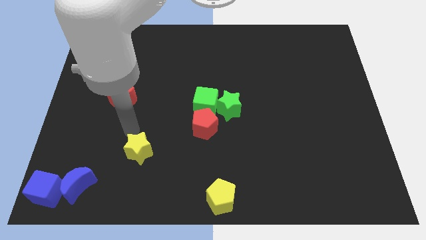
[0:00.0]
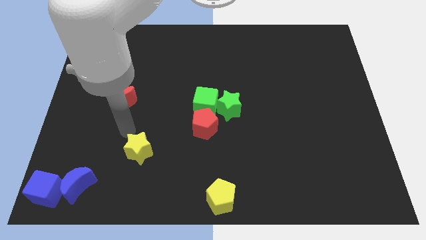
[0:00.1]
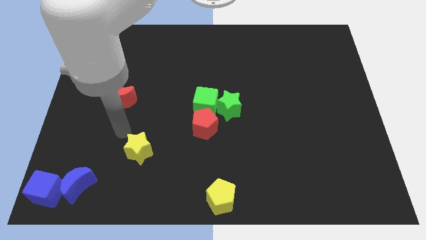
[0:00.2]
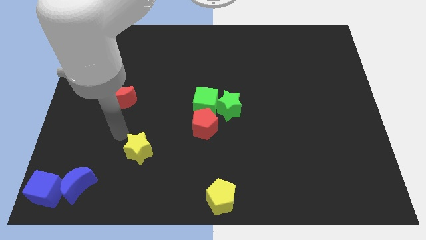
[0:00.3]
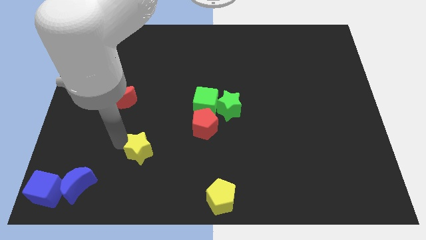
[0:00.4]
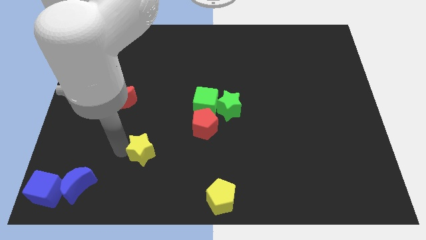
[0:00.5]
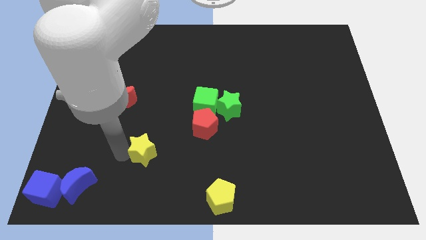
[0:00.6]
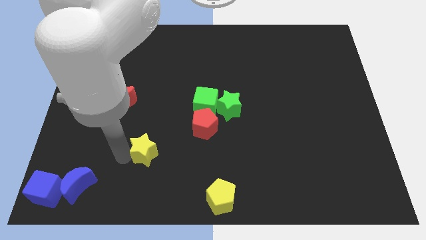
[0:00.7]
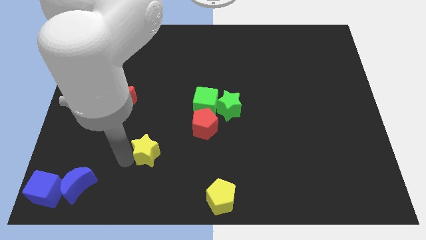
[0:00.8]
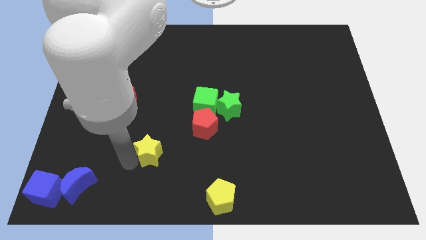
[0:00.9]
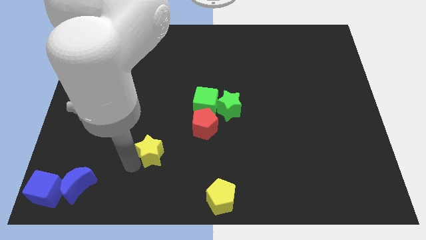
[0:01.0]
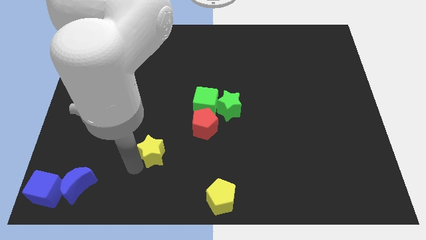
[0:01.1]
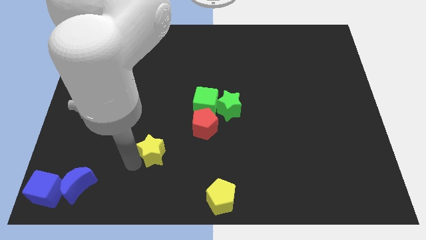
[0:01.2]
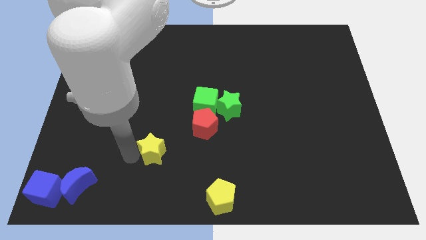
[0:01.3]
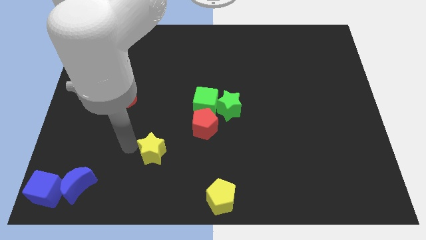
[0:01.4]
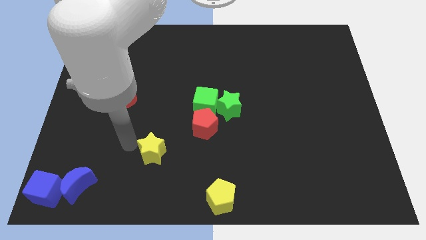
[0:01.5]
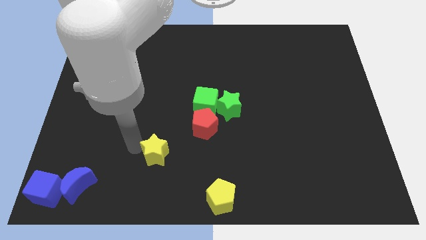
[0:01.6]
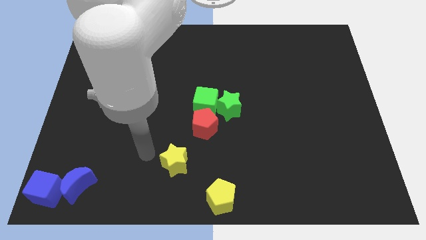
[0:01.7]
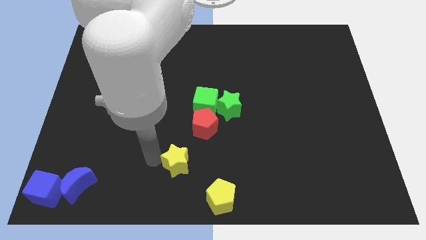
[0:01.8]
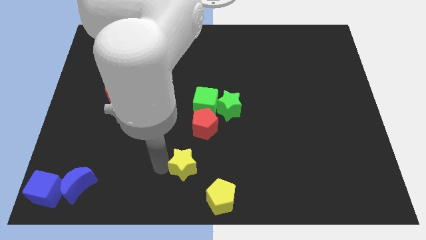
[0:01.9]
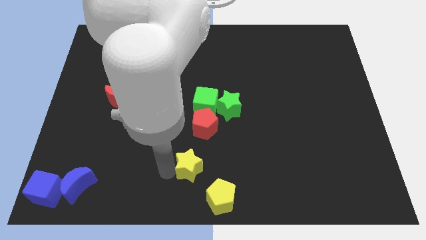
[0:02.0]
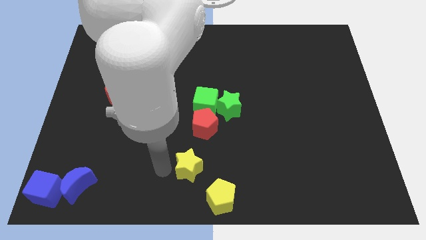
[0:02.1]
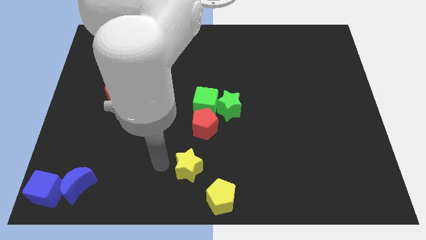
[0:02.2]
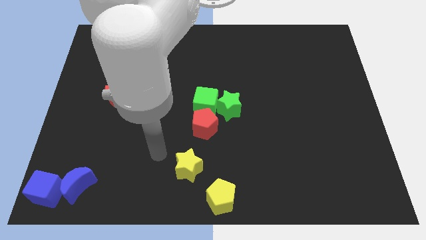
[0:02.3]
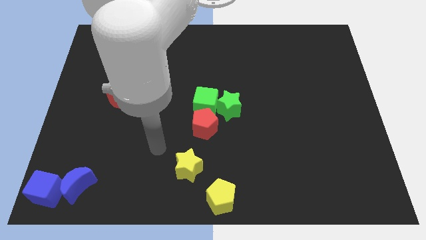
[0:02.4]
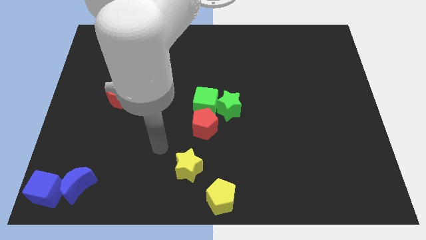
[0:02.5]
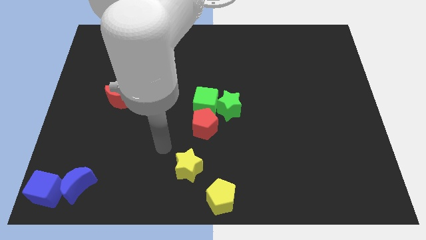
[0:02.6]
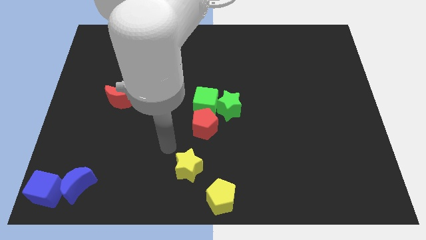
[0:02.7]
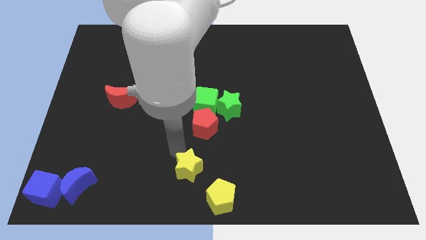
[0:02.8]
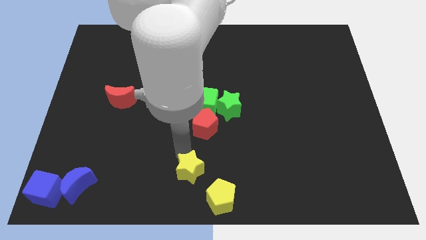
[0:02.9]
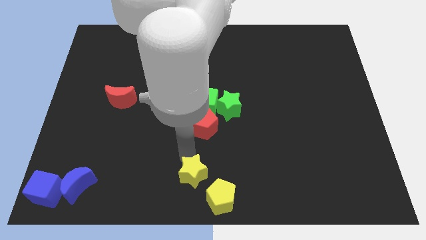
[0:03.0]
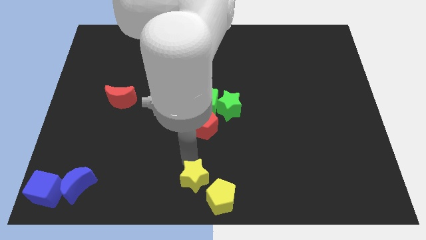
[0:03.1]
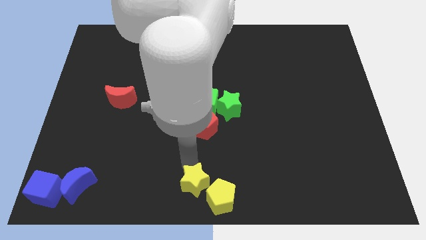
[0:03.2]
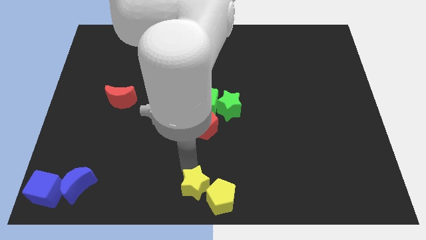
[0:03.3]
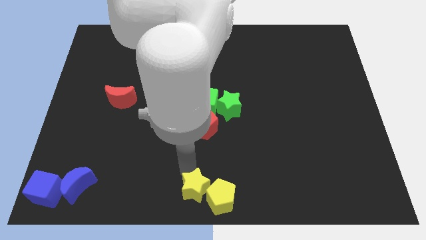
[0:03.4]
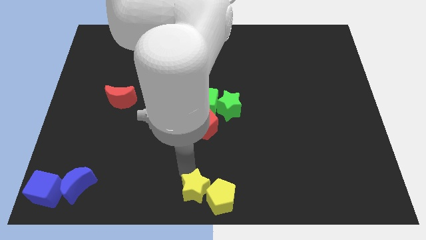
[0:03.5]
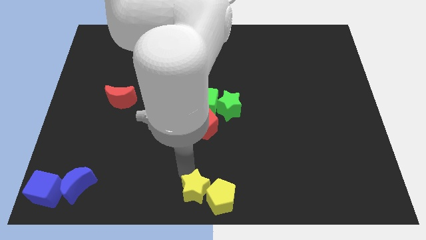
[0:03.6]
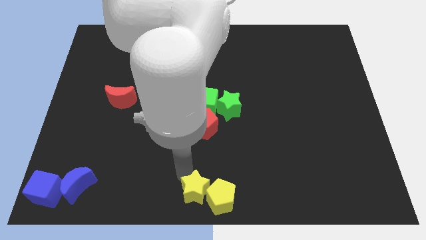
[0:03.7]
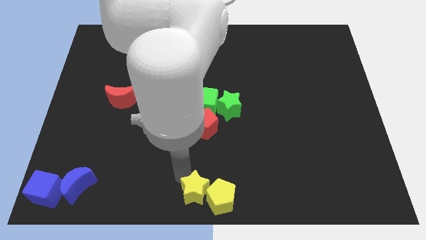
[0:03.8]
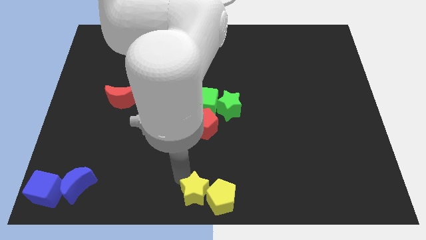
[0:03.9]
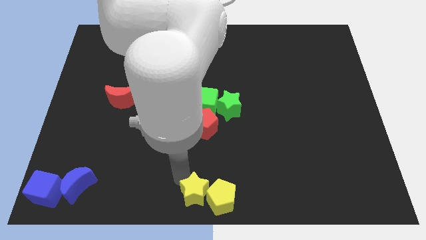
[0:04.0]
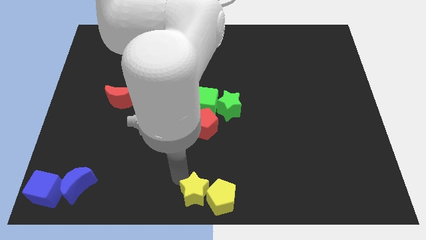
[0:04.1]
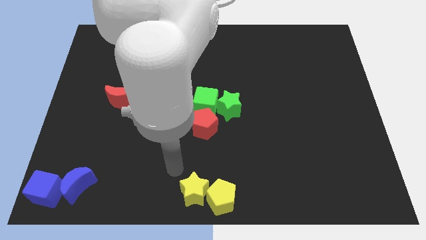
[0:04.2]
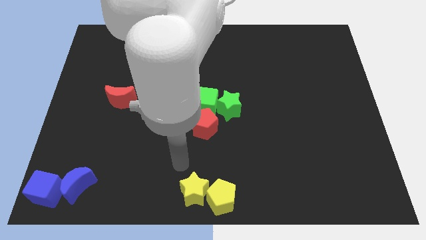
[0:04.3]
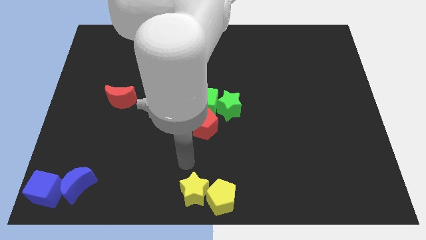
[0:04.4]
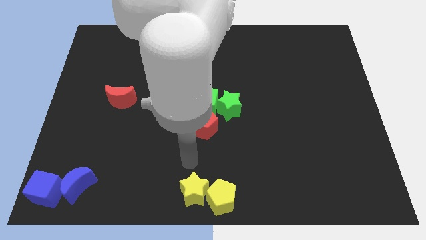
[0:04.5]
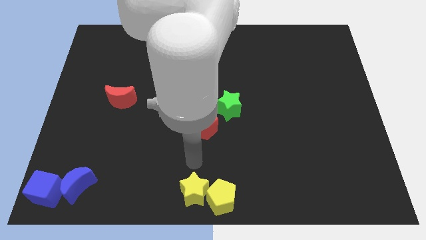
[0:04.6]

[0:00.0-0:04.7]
push the yellow star into the yellow pentagon

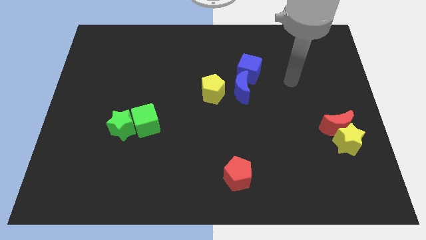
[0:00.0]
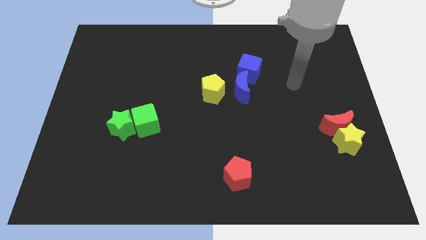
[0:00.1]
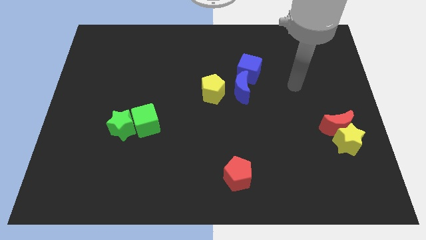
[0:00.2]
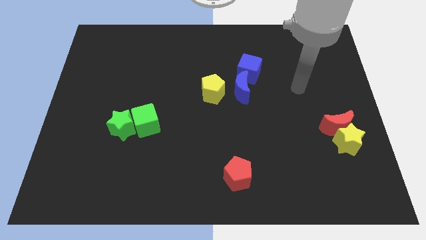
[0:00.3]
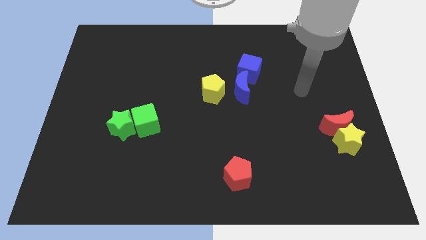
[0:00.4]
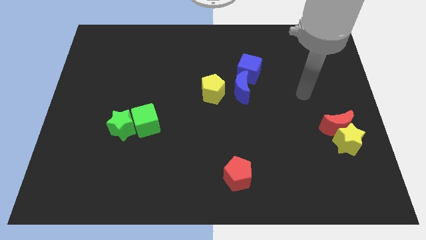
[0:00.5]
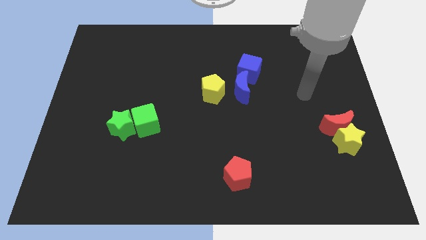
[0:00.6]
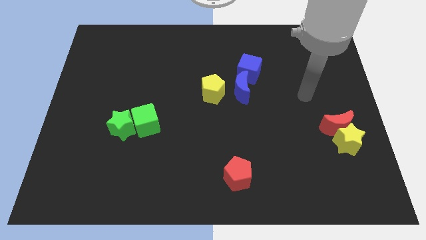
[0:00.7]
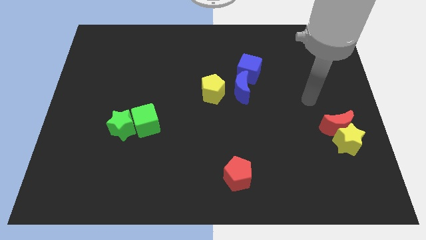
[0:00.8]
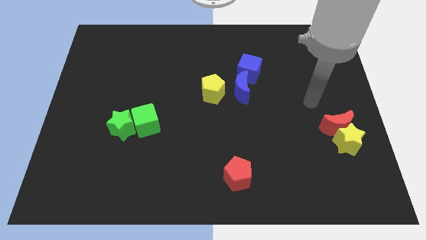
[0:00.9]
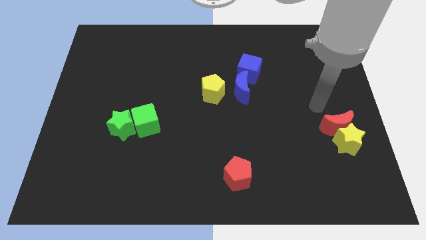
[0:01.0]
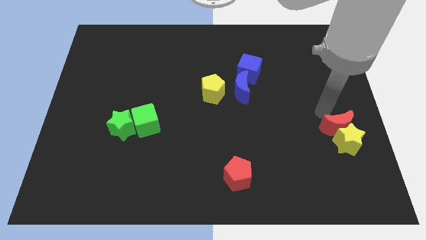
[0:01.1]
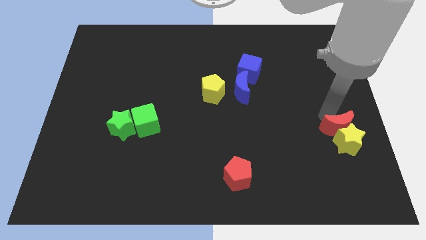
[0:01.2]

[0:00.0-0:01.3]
move your arm towards the red moon

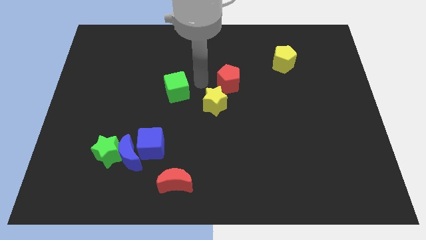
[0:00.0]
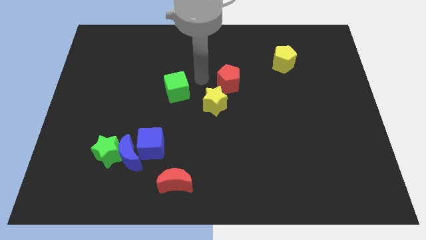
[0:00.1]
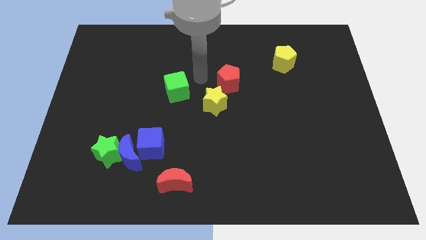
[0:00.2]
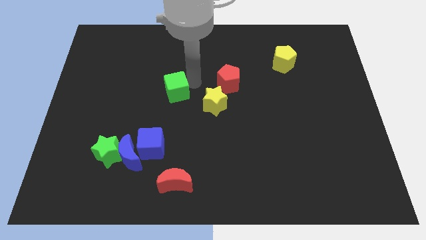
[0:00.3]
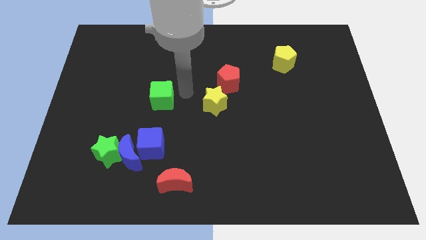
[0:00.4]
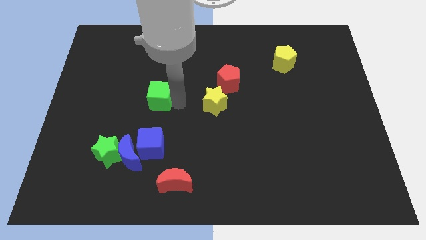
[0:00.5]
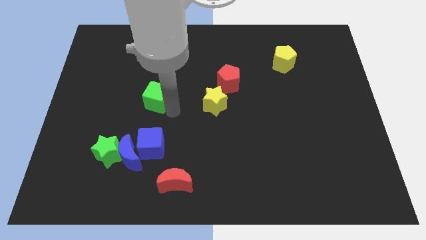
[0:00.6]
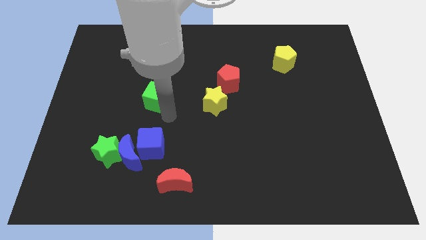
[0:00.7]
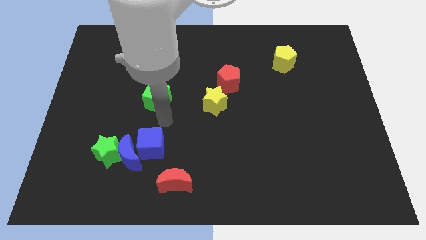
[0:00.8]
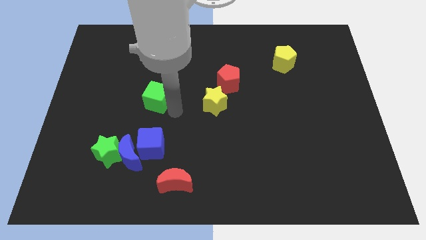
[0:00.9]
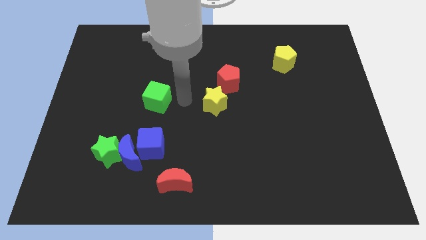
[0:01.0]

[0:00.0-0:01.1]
move the green cube to the parallel top of the blue cube

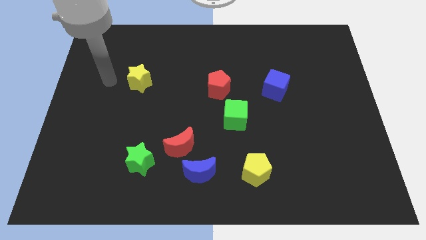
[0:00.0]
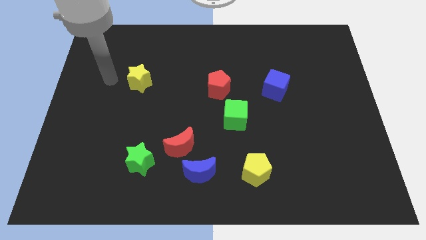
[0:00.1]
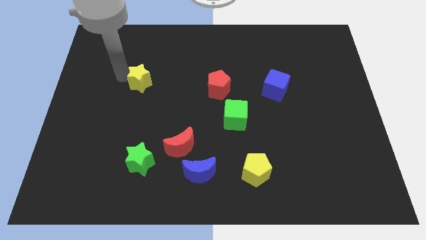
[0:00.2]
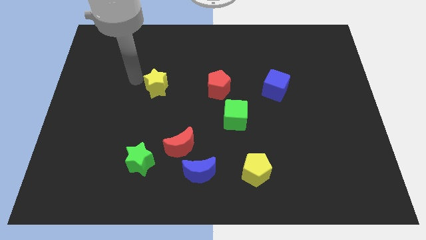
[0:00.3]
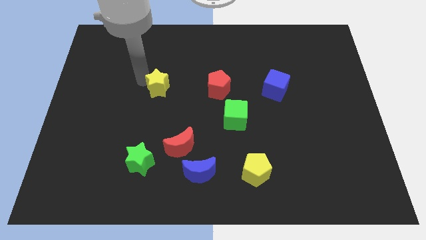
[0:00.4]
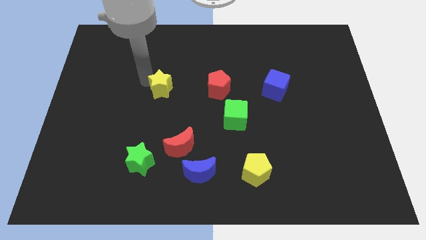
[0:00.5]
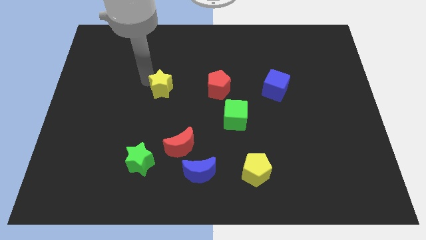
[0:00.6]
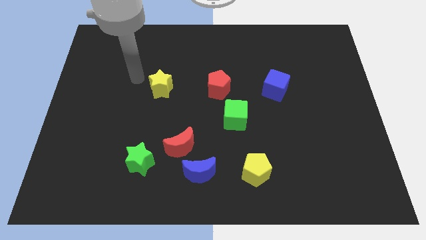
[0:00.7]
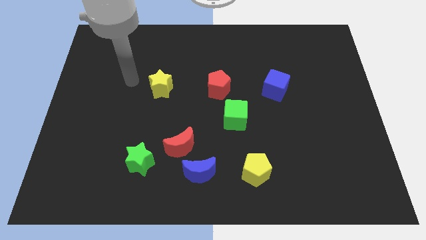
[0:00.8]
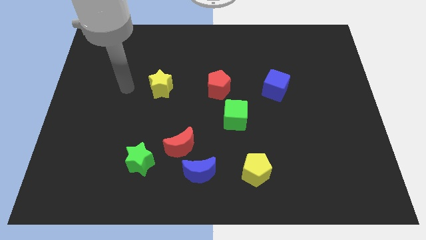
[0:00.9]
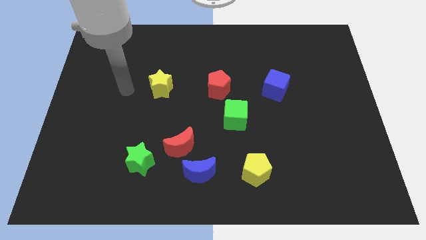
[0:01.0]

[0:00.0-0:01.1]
push yellow star above red crescent

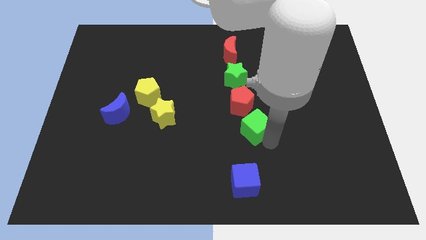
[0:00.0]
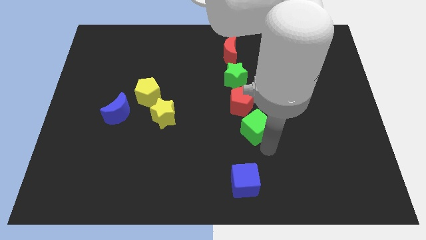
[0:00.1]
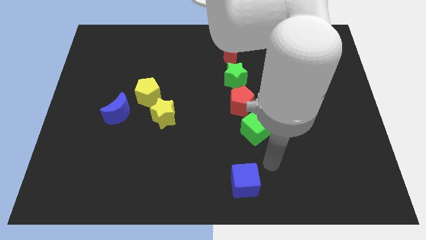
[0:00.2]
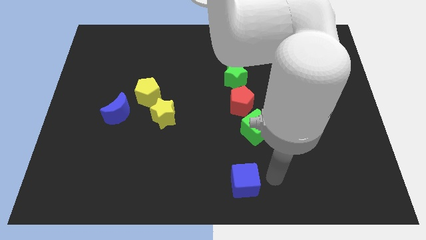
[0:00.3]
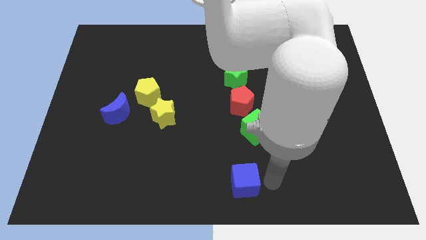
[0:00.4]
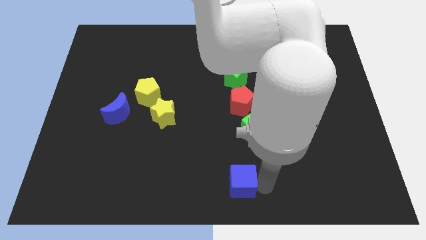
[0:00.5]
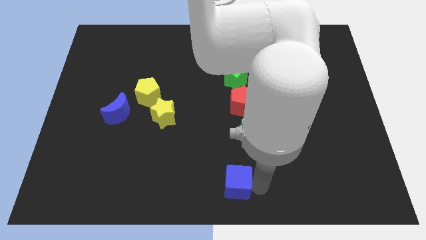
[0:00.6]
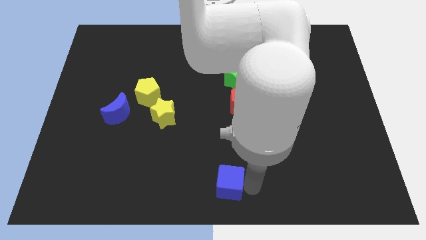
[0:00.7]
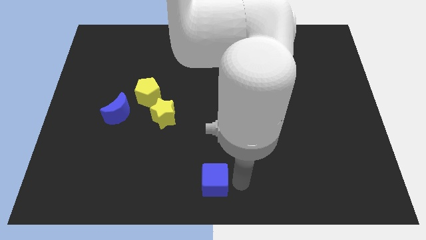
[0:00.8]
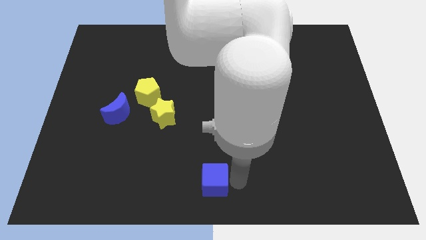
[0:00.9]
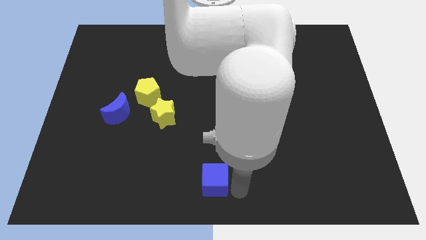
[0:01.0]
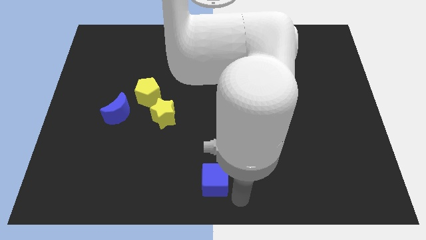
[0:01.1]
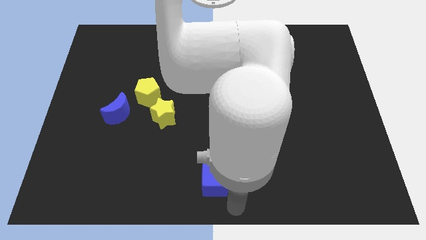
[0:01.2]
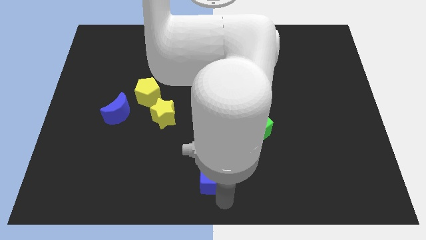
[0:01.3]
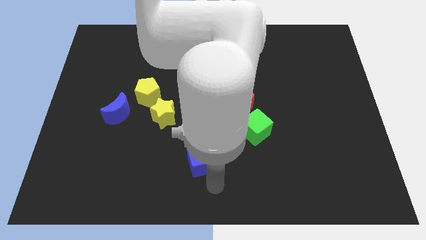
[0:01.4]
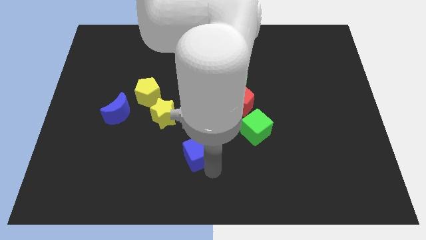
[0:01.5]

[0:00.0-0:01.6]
move the blue cube to the bottom left of the green cubee
